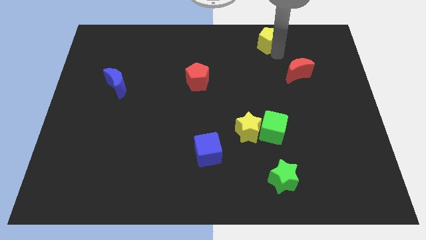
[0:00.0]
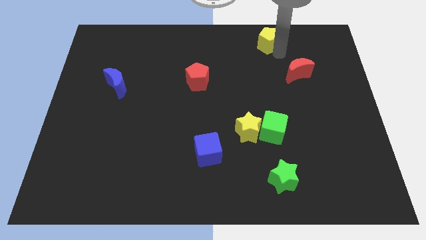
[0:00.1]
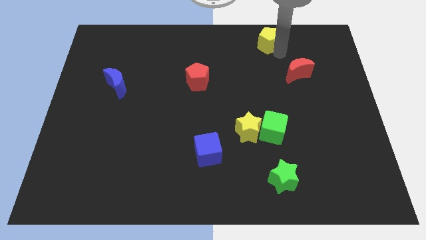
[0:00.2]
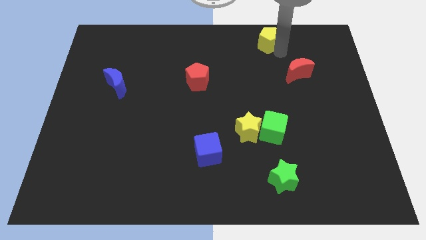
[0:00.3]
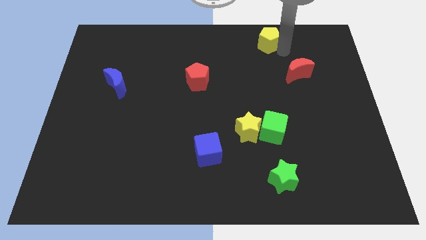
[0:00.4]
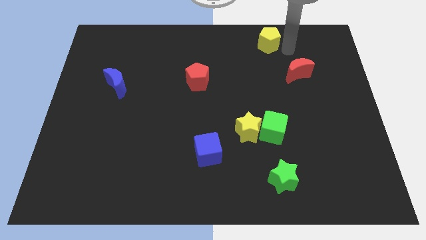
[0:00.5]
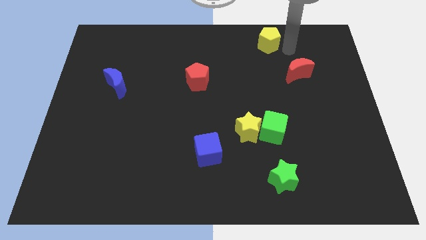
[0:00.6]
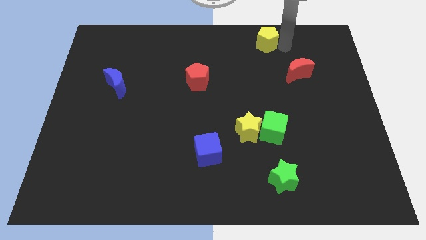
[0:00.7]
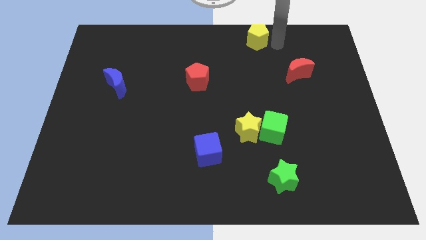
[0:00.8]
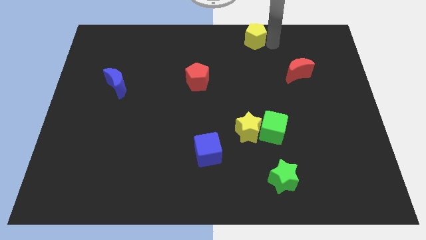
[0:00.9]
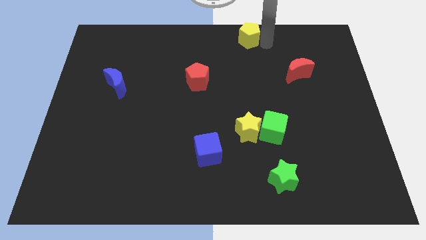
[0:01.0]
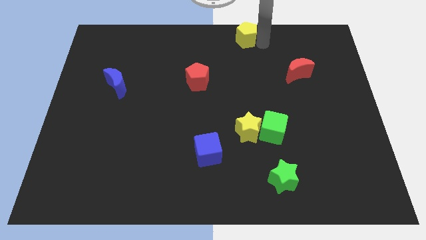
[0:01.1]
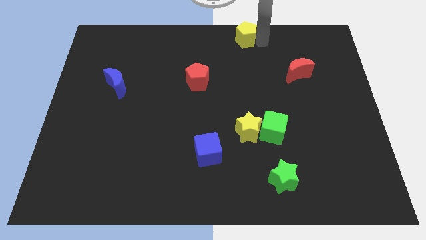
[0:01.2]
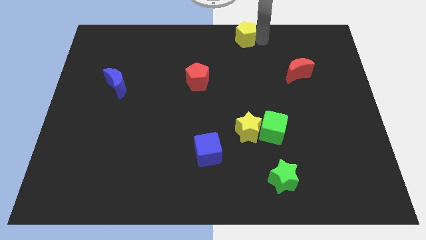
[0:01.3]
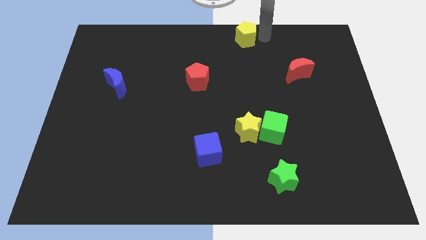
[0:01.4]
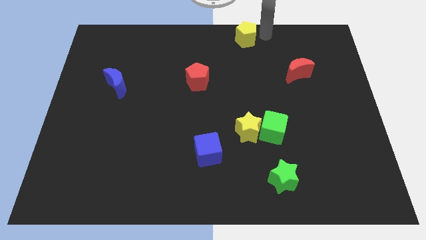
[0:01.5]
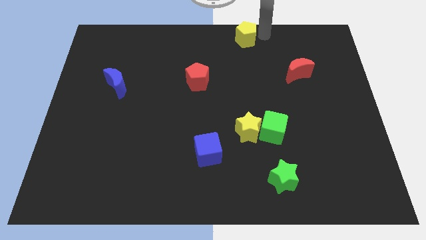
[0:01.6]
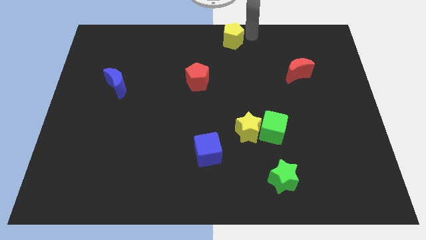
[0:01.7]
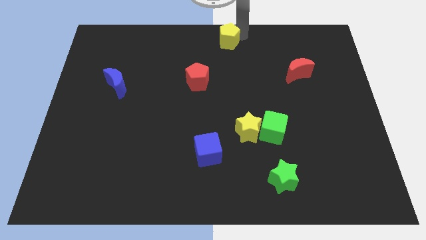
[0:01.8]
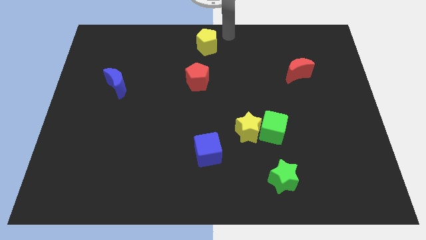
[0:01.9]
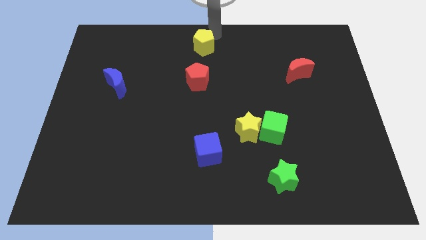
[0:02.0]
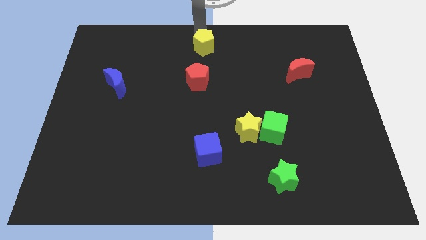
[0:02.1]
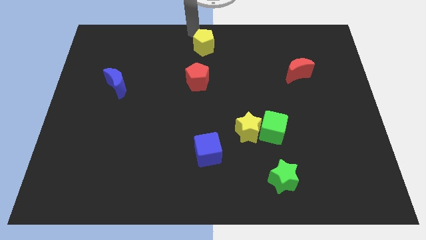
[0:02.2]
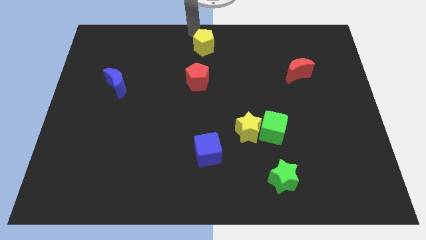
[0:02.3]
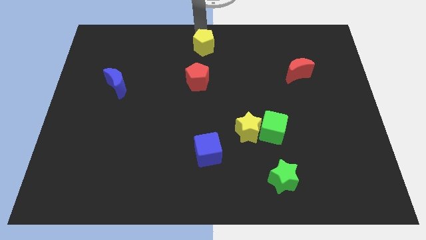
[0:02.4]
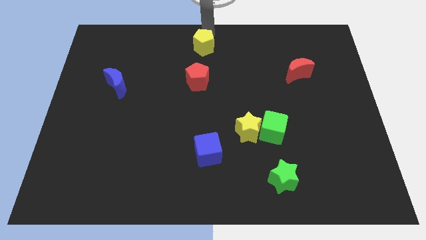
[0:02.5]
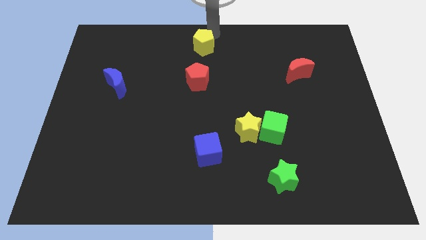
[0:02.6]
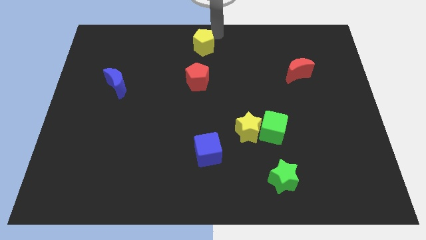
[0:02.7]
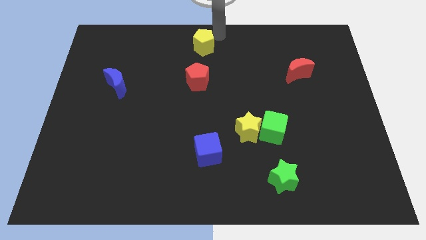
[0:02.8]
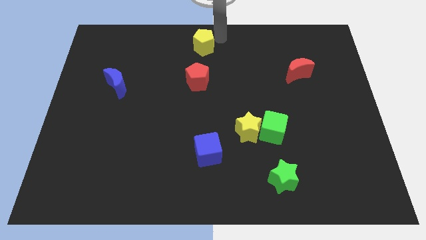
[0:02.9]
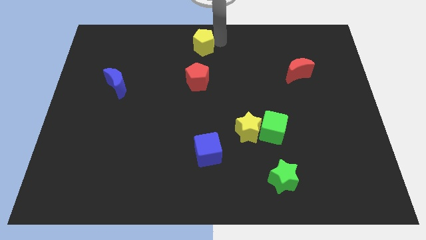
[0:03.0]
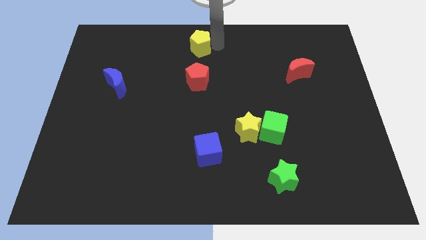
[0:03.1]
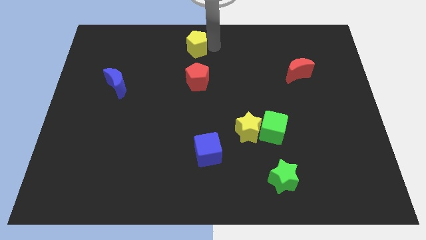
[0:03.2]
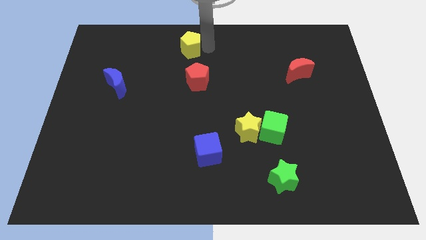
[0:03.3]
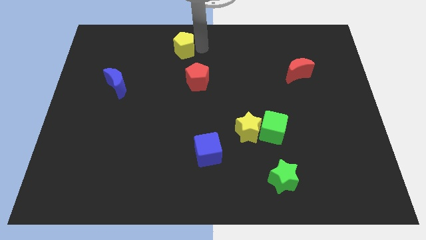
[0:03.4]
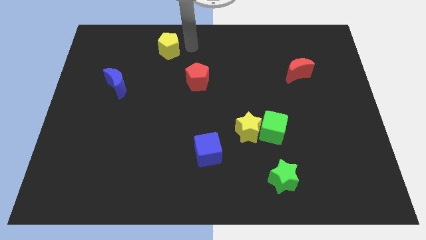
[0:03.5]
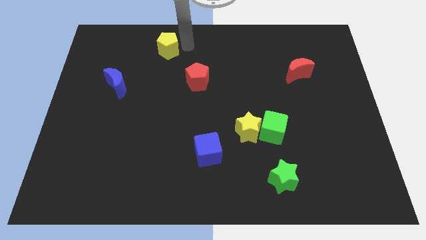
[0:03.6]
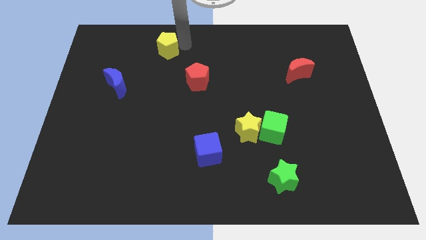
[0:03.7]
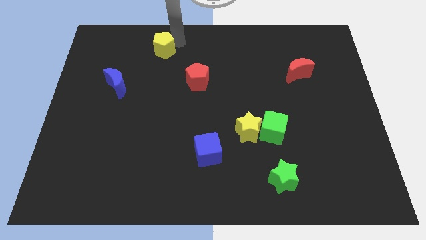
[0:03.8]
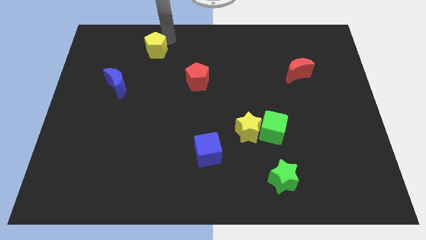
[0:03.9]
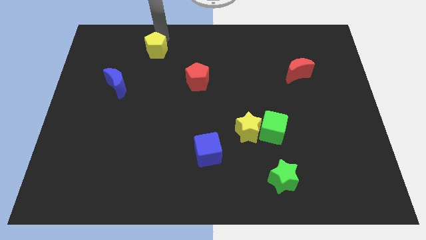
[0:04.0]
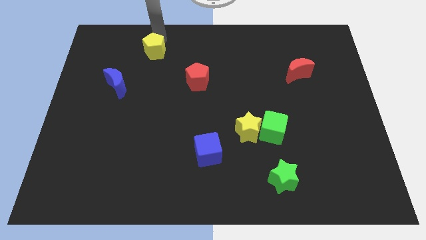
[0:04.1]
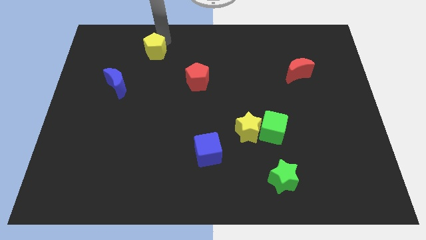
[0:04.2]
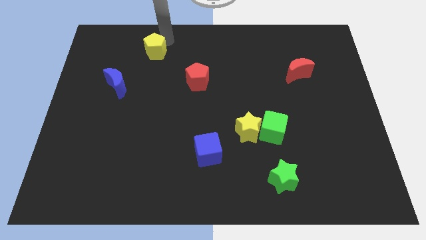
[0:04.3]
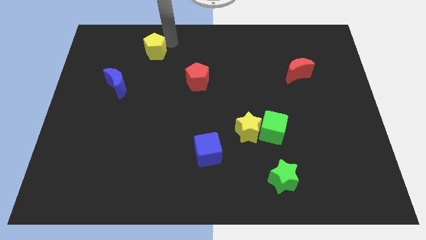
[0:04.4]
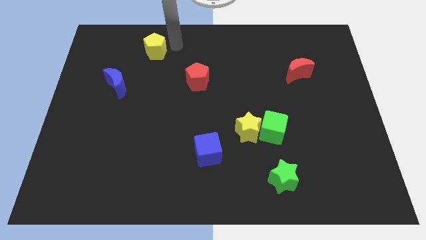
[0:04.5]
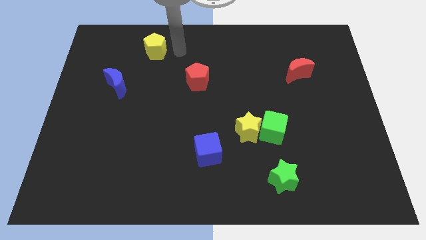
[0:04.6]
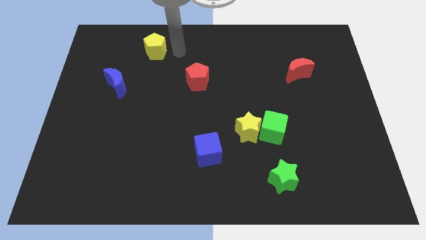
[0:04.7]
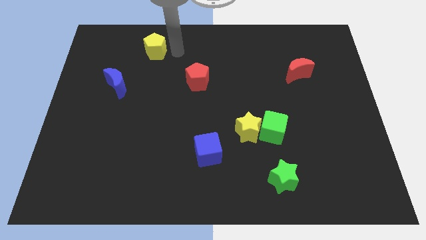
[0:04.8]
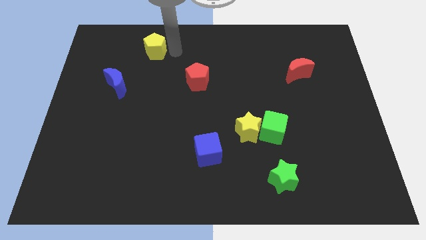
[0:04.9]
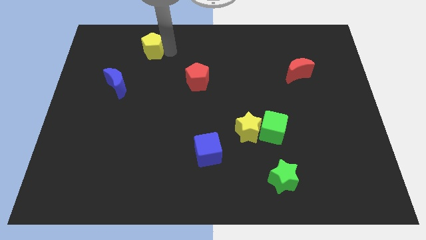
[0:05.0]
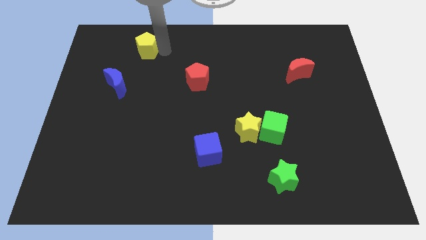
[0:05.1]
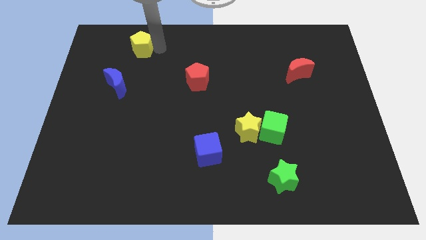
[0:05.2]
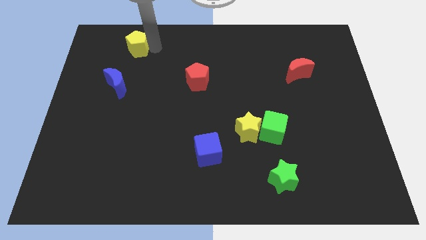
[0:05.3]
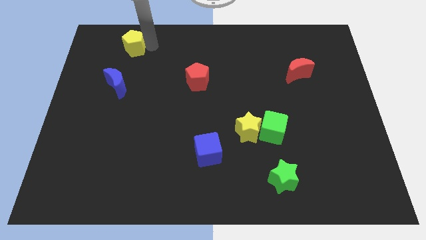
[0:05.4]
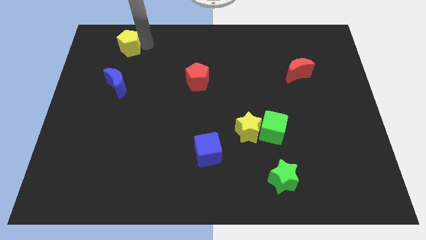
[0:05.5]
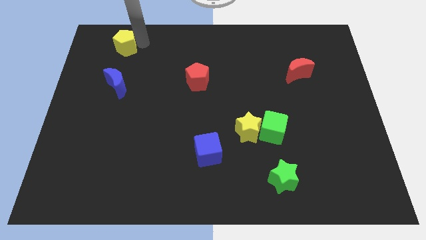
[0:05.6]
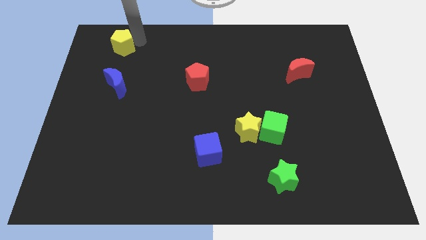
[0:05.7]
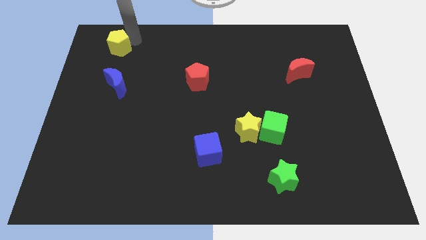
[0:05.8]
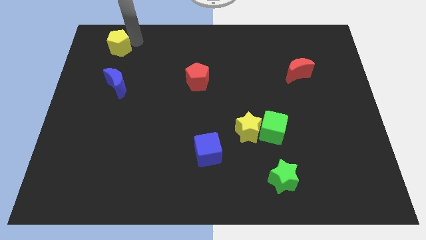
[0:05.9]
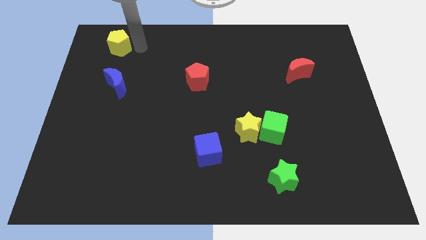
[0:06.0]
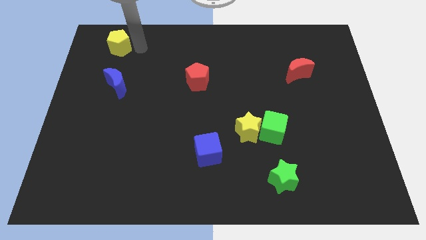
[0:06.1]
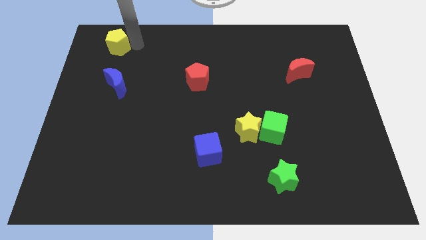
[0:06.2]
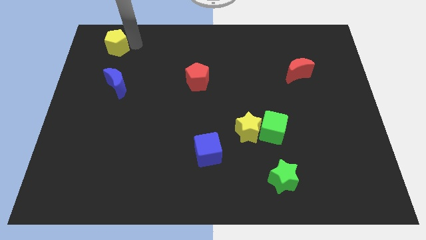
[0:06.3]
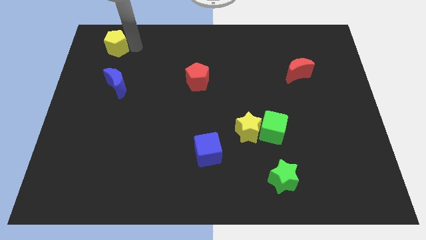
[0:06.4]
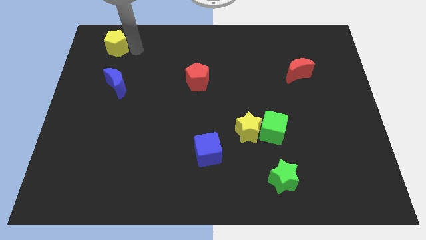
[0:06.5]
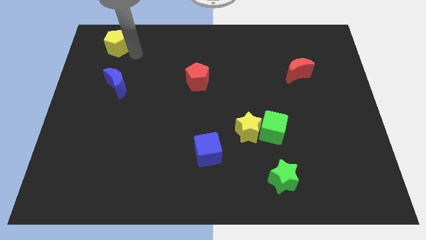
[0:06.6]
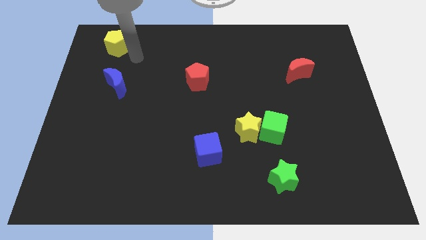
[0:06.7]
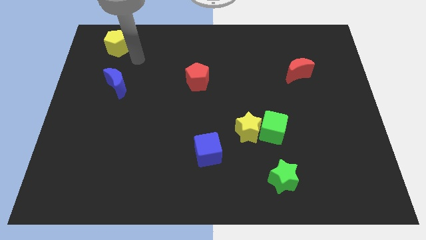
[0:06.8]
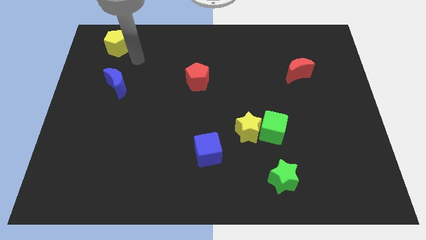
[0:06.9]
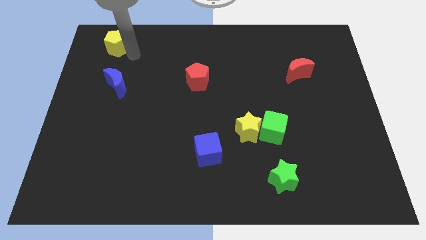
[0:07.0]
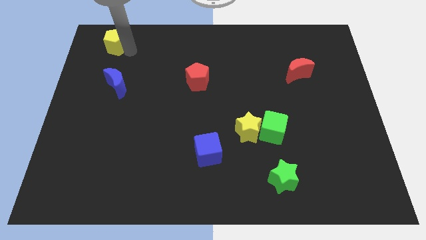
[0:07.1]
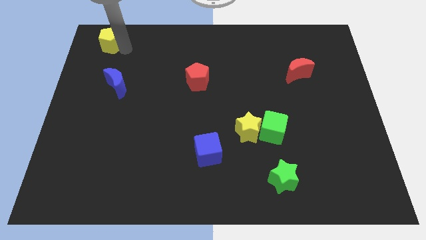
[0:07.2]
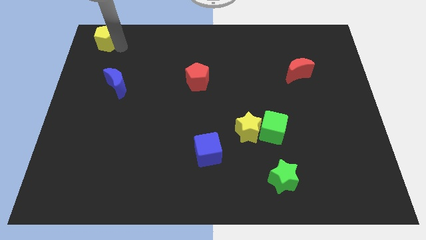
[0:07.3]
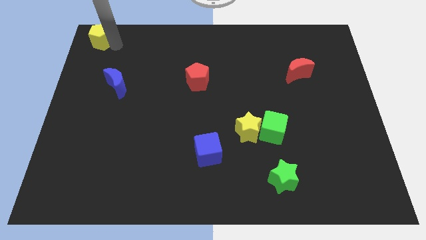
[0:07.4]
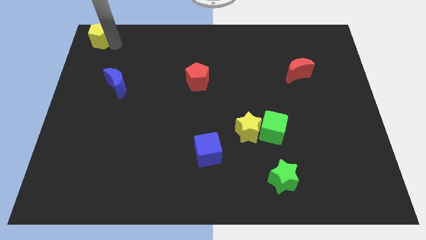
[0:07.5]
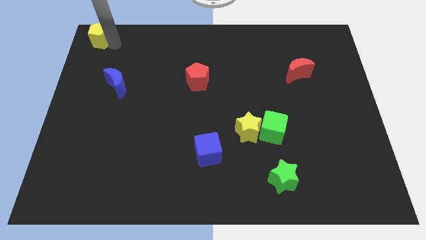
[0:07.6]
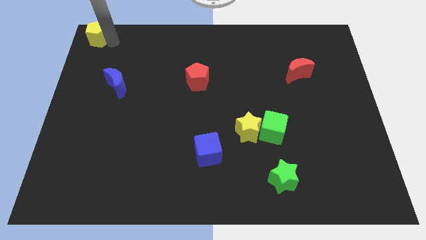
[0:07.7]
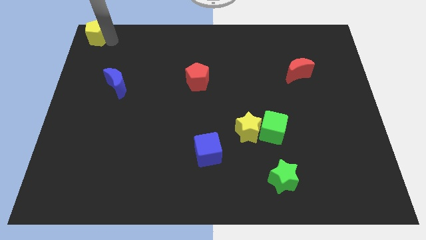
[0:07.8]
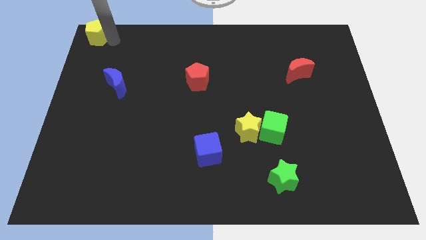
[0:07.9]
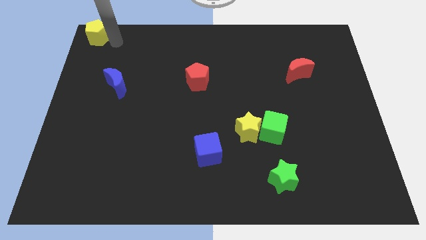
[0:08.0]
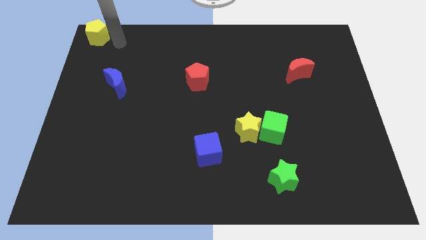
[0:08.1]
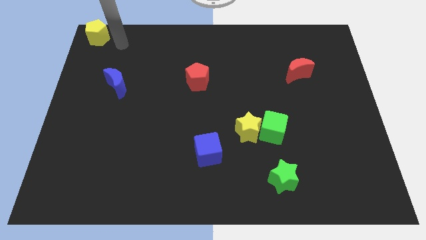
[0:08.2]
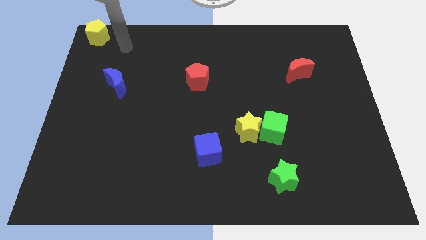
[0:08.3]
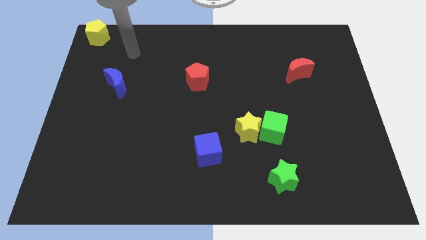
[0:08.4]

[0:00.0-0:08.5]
place yellow pentagon to the top left corner of the board

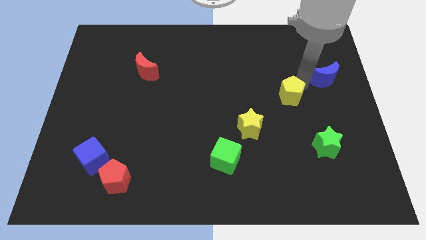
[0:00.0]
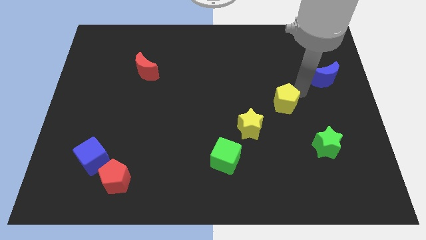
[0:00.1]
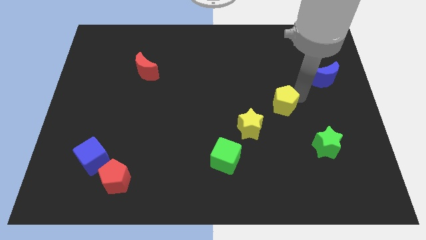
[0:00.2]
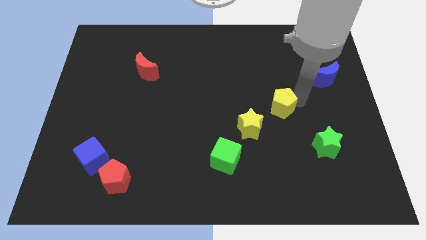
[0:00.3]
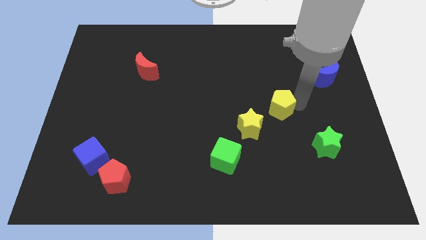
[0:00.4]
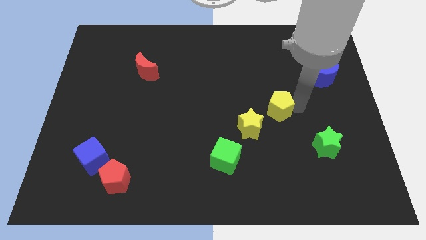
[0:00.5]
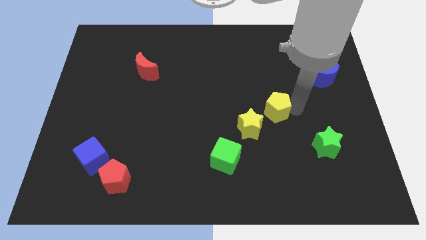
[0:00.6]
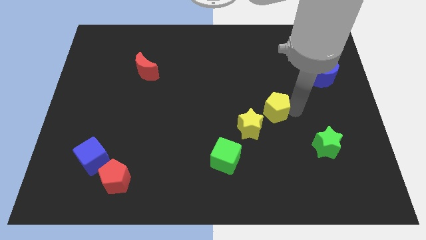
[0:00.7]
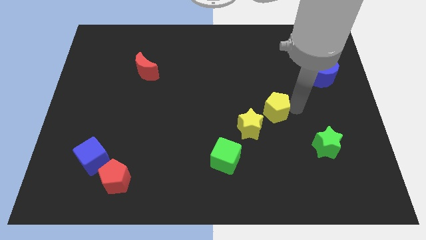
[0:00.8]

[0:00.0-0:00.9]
separate the yellow pentagon from the blue crescent
